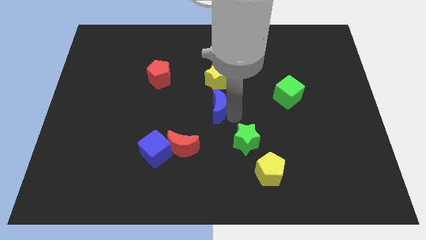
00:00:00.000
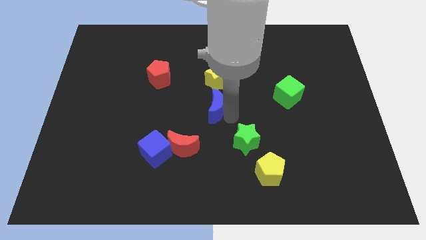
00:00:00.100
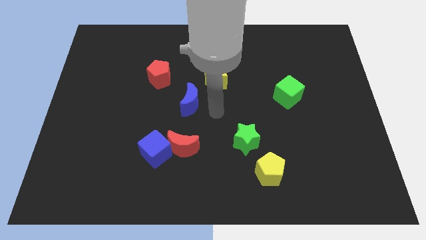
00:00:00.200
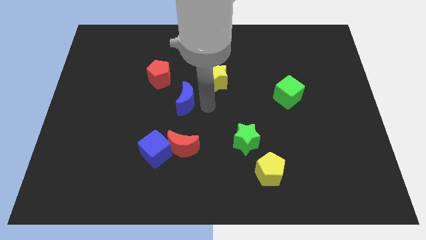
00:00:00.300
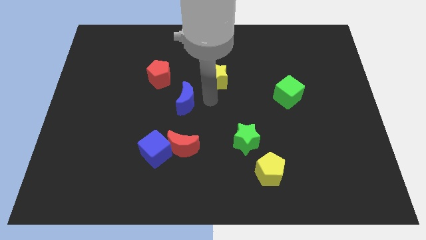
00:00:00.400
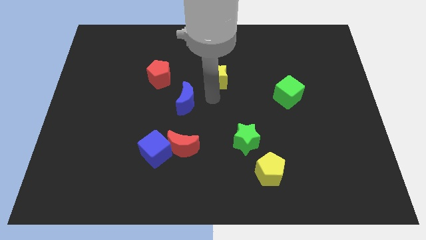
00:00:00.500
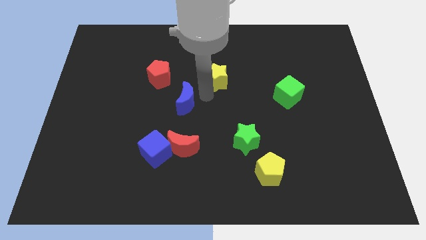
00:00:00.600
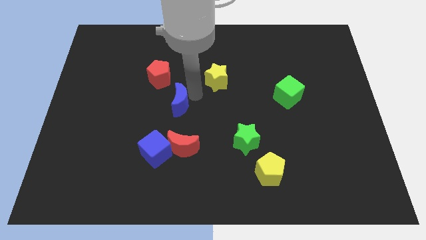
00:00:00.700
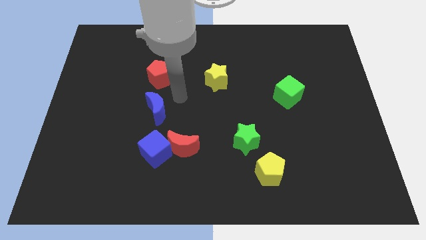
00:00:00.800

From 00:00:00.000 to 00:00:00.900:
put the blue moon in between the blue cube and red pentagon

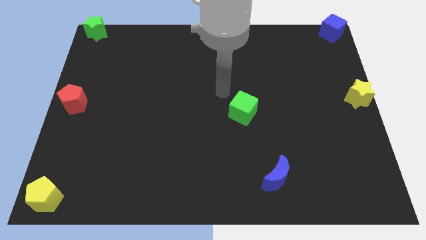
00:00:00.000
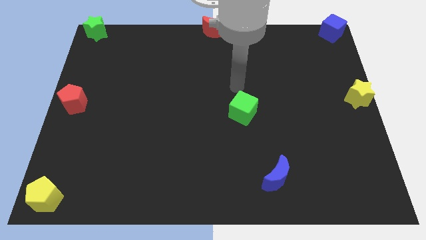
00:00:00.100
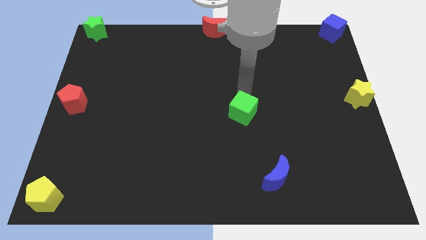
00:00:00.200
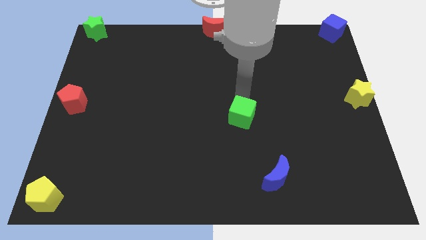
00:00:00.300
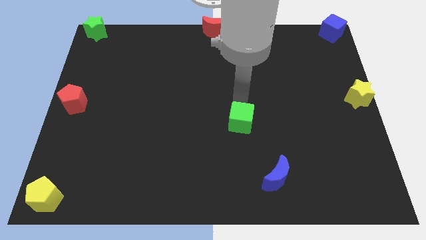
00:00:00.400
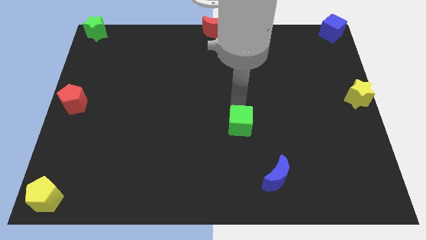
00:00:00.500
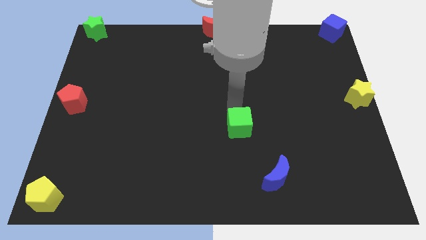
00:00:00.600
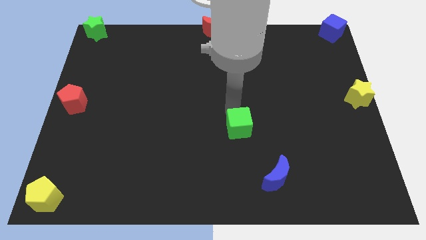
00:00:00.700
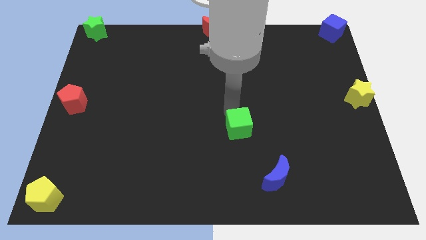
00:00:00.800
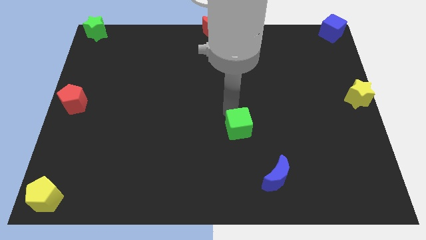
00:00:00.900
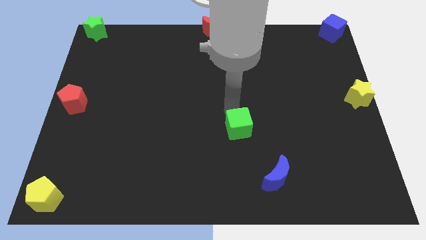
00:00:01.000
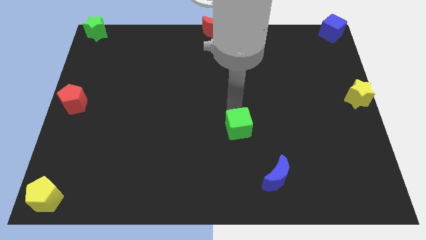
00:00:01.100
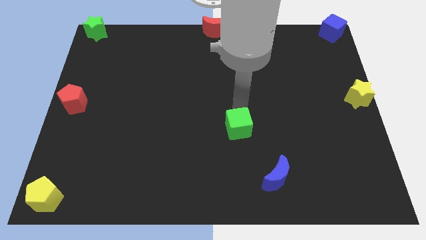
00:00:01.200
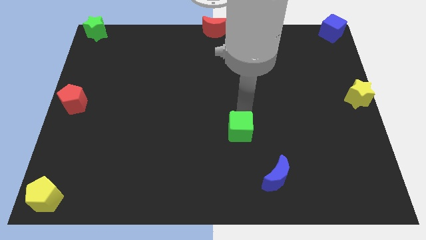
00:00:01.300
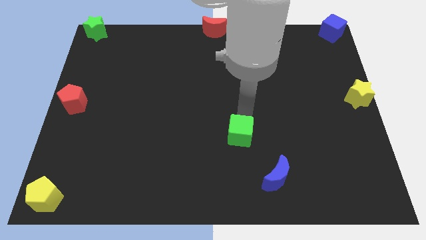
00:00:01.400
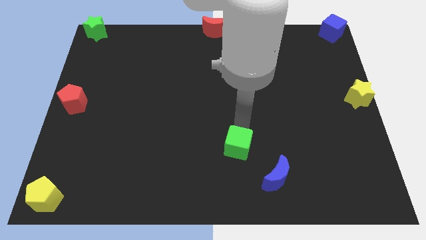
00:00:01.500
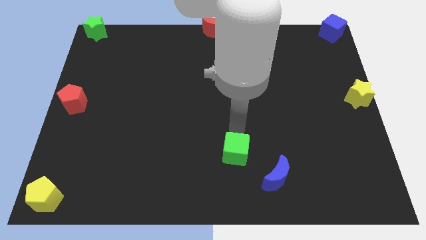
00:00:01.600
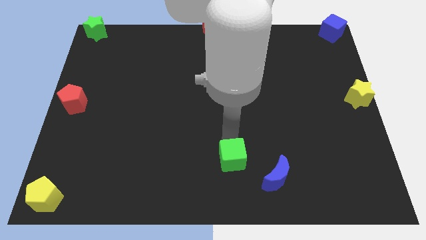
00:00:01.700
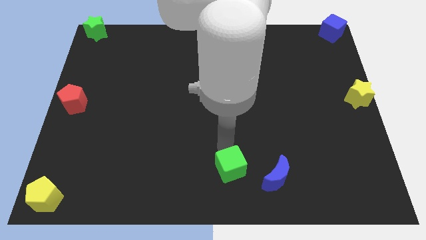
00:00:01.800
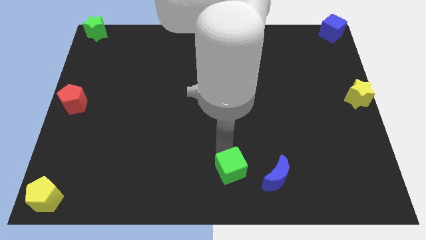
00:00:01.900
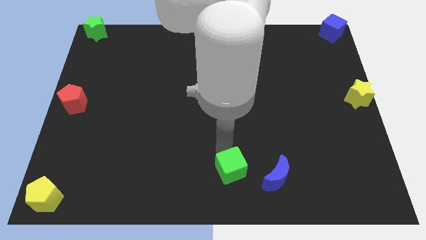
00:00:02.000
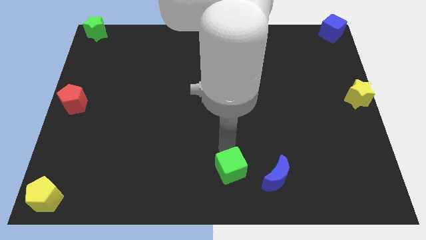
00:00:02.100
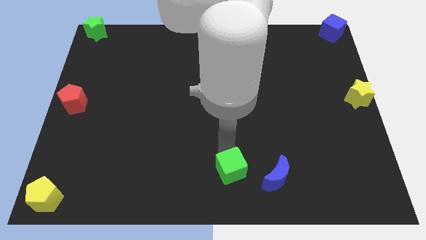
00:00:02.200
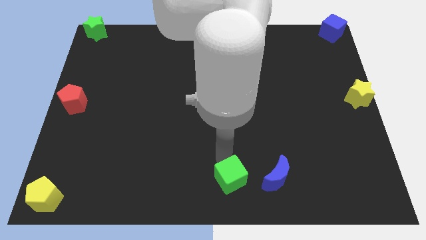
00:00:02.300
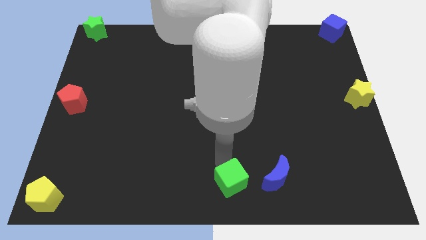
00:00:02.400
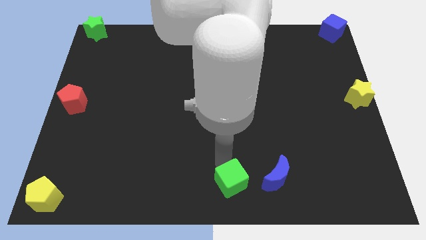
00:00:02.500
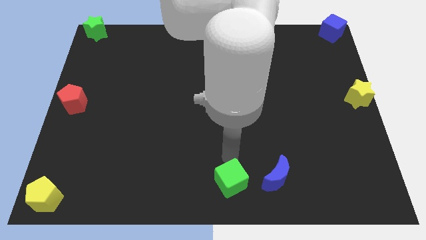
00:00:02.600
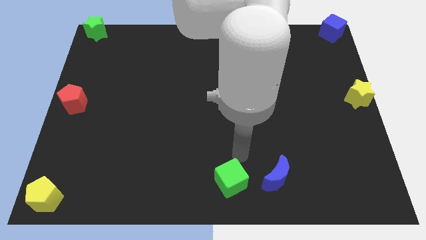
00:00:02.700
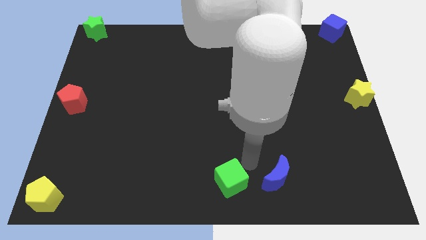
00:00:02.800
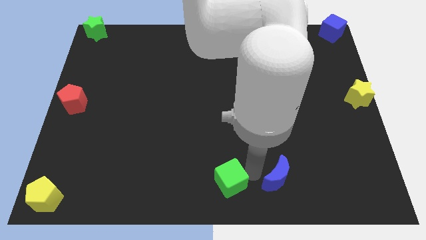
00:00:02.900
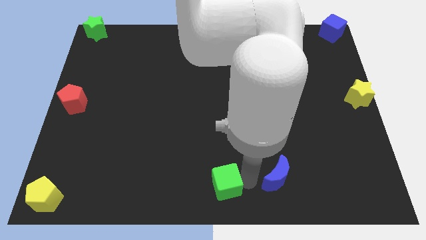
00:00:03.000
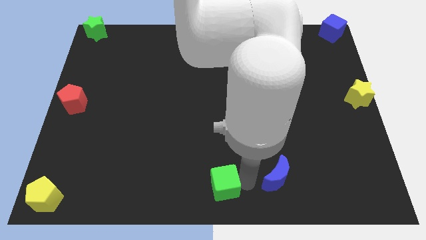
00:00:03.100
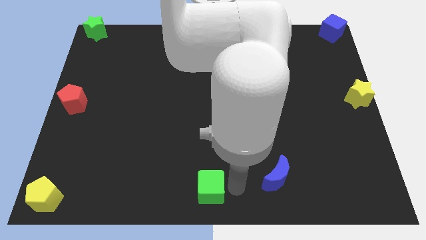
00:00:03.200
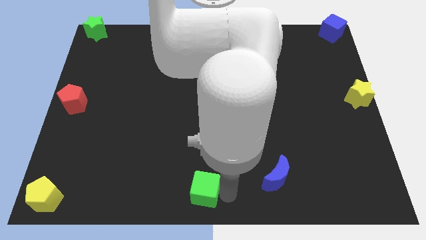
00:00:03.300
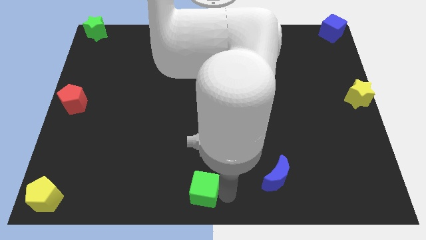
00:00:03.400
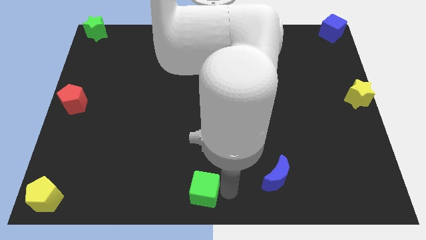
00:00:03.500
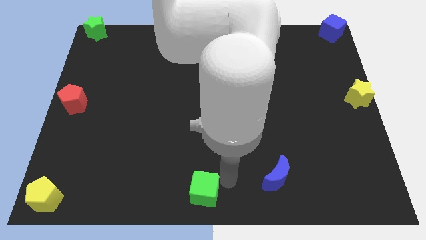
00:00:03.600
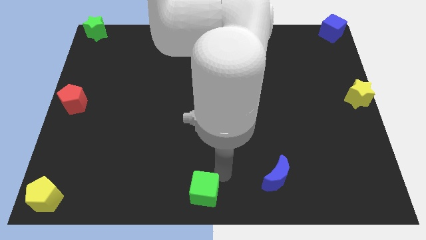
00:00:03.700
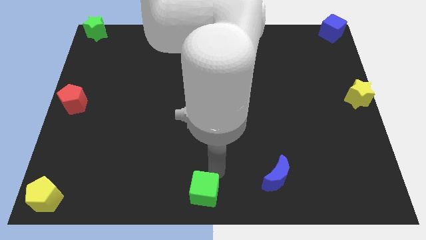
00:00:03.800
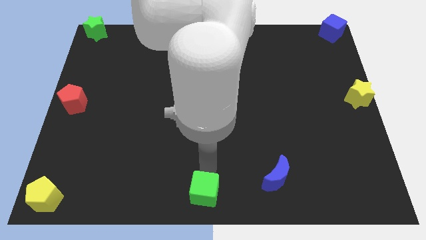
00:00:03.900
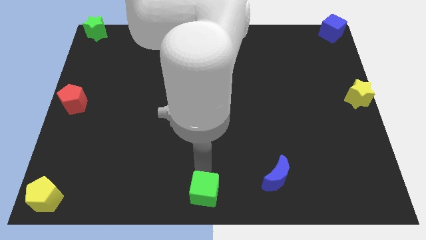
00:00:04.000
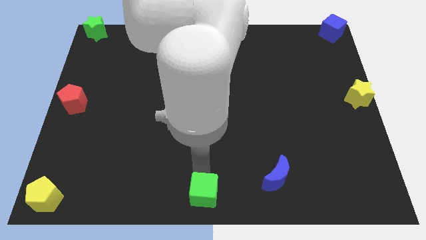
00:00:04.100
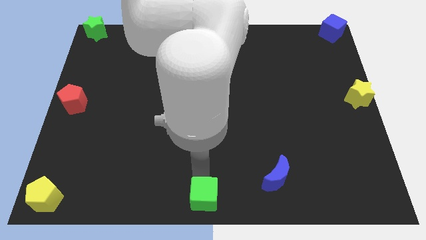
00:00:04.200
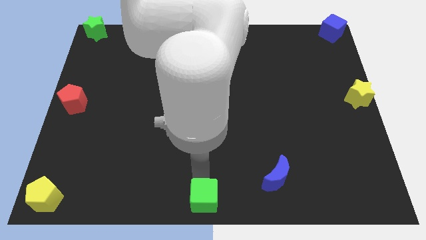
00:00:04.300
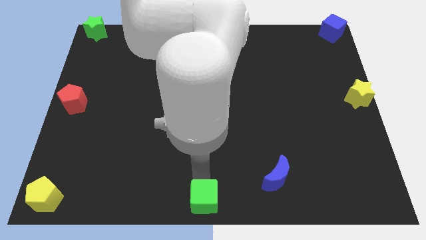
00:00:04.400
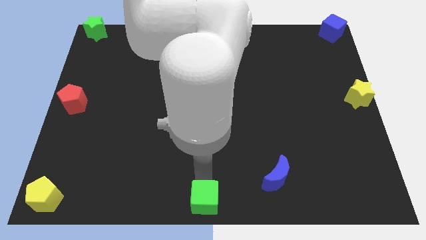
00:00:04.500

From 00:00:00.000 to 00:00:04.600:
move the green cube to the bottom center of the board

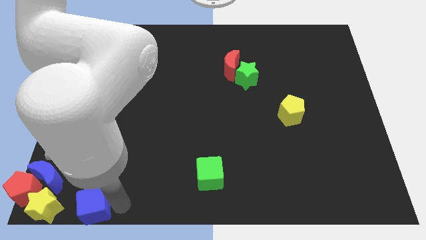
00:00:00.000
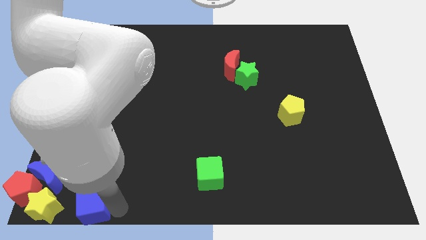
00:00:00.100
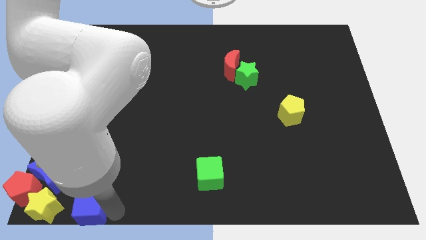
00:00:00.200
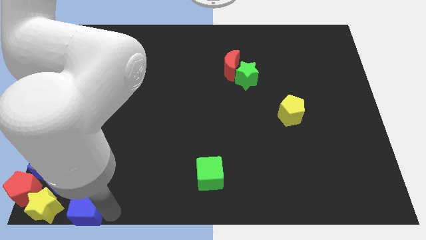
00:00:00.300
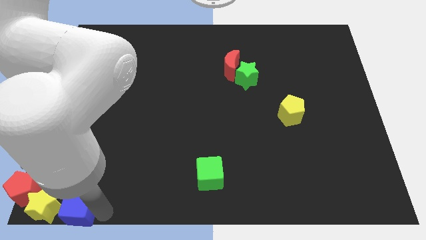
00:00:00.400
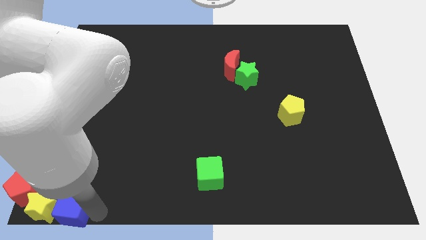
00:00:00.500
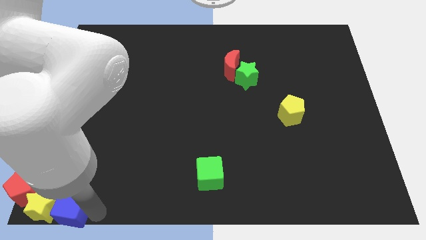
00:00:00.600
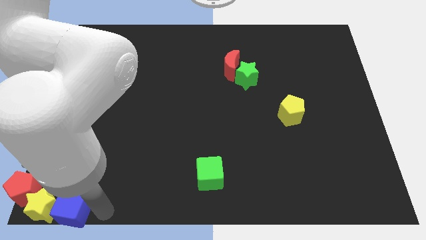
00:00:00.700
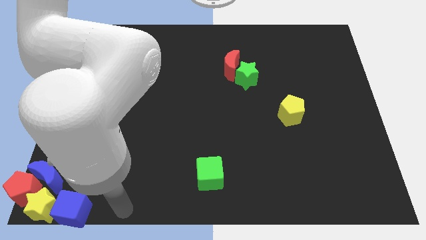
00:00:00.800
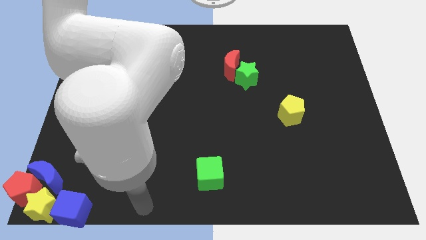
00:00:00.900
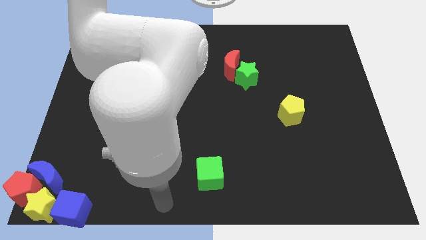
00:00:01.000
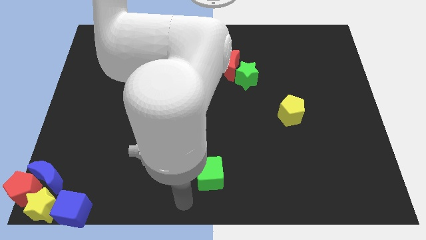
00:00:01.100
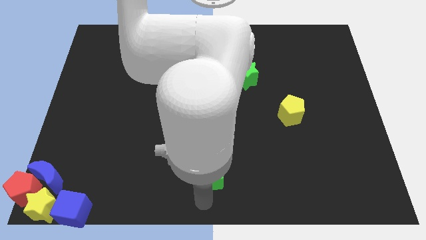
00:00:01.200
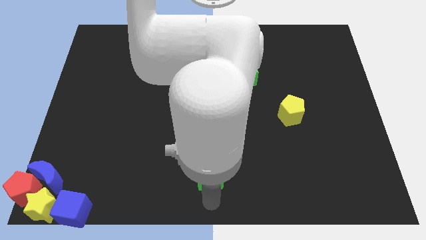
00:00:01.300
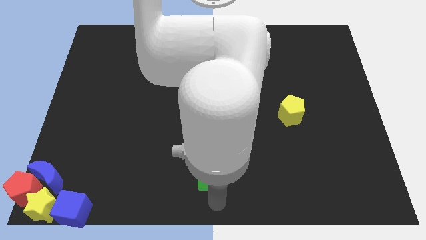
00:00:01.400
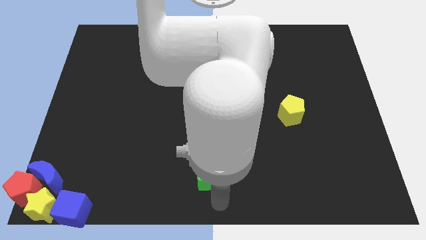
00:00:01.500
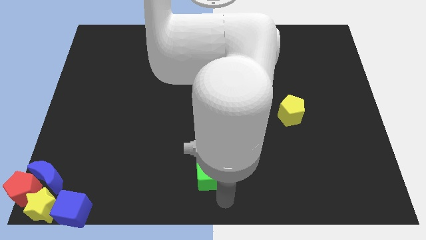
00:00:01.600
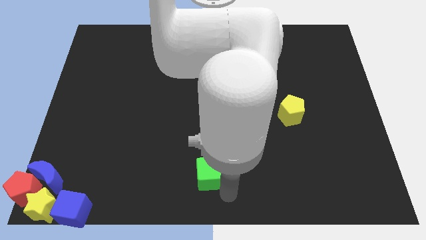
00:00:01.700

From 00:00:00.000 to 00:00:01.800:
slightly move the blue cube into yellow star

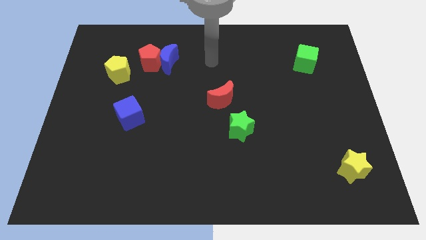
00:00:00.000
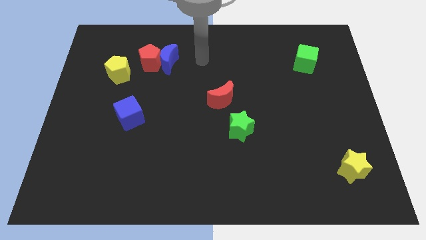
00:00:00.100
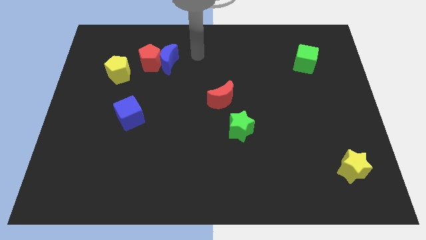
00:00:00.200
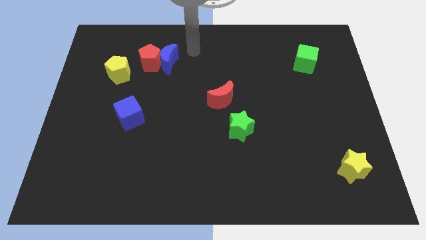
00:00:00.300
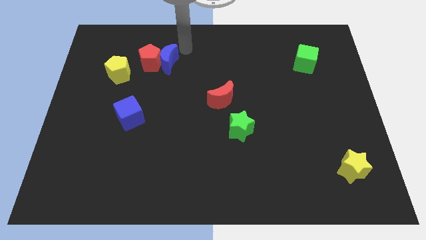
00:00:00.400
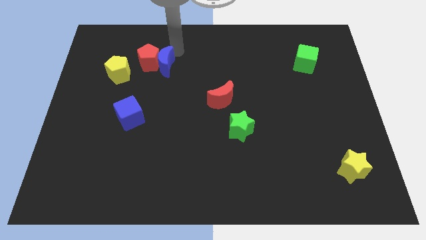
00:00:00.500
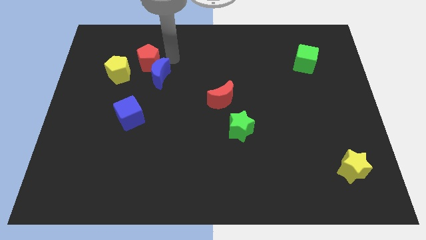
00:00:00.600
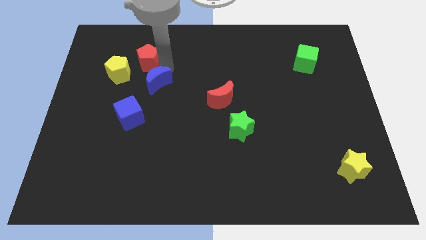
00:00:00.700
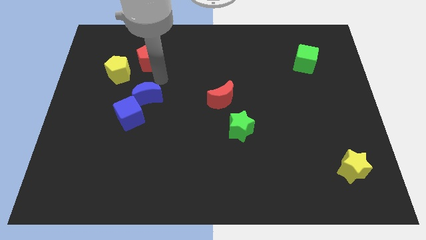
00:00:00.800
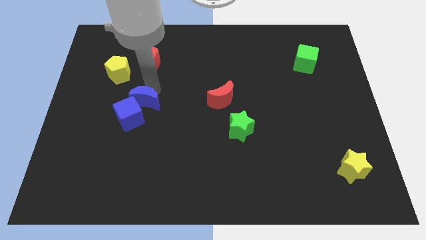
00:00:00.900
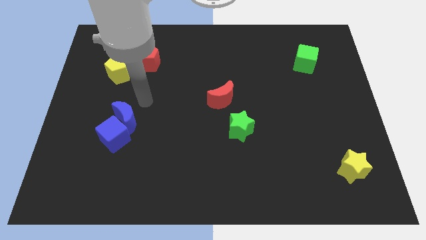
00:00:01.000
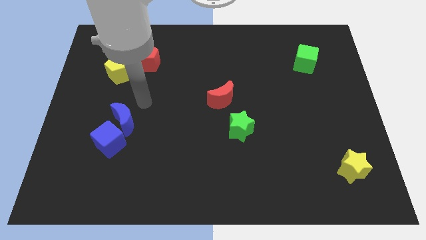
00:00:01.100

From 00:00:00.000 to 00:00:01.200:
move the blue moon into the blue cube

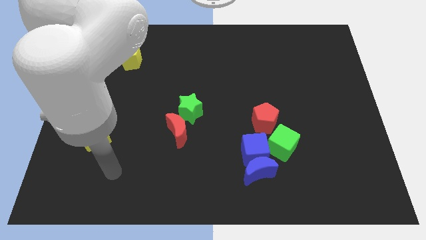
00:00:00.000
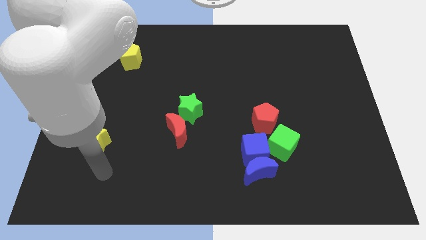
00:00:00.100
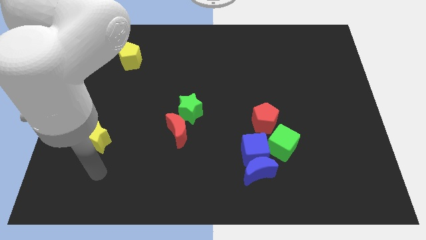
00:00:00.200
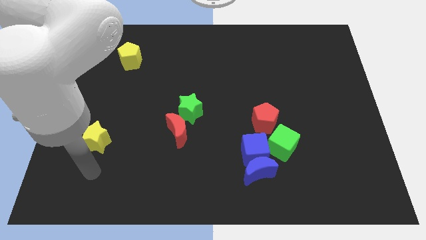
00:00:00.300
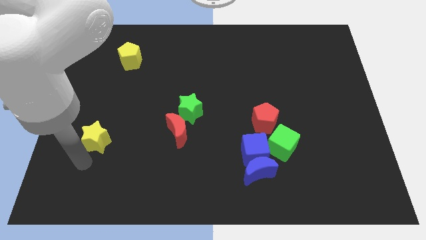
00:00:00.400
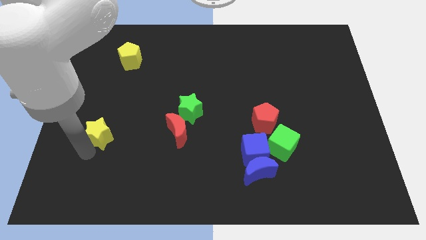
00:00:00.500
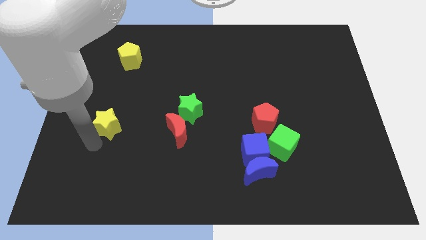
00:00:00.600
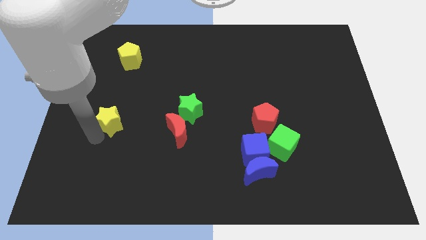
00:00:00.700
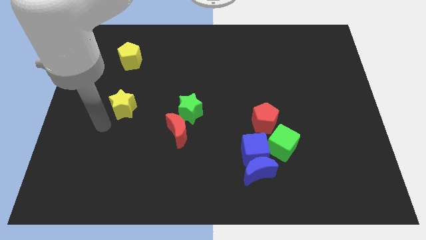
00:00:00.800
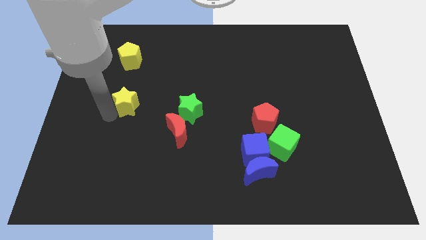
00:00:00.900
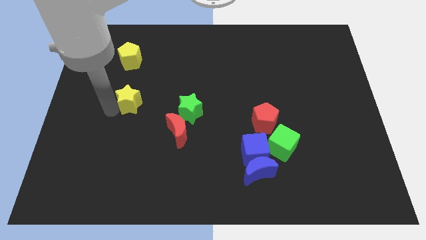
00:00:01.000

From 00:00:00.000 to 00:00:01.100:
place the yellow star below the yellow pentagon
